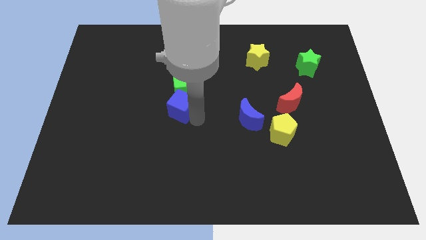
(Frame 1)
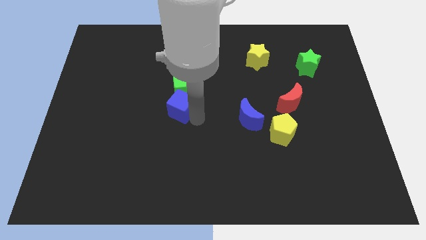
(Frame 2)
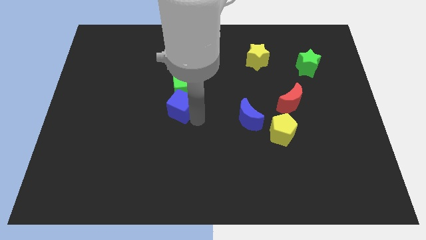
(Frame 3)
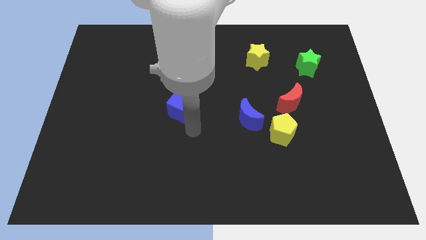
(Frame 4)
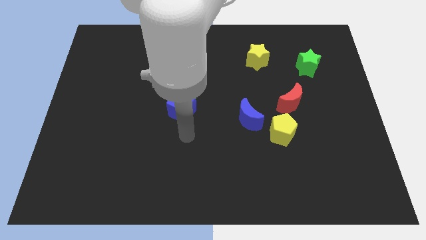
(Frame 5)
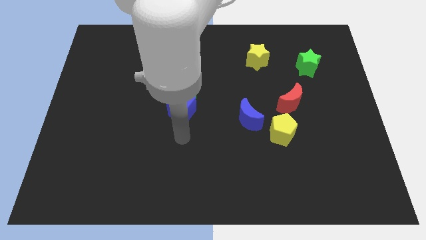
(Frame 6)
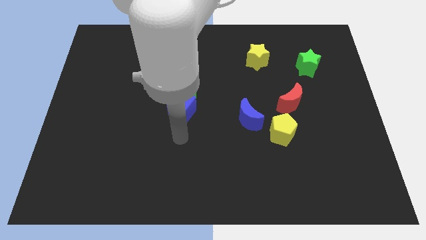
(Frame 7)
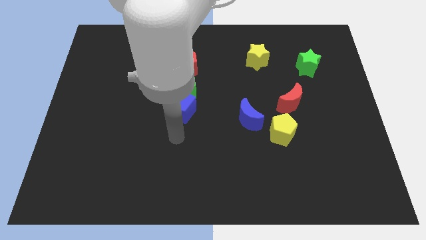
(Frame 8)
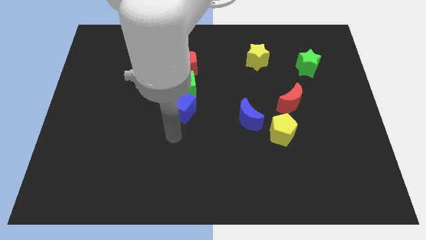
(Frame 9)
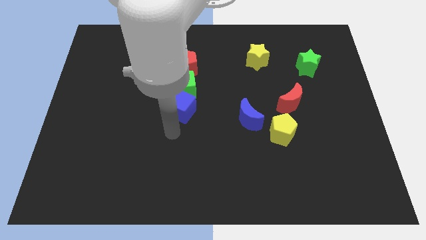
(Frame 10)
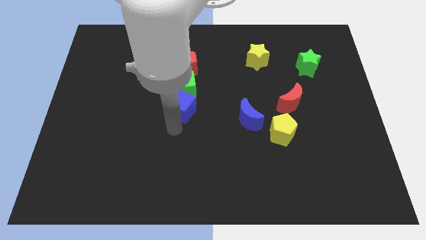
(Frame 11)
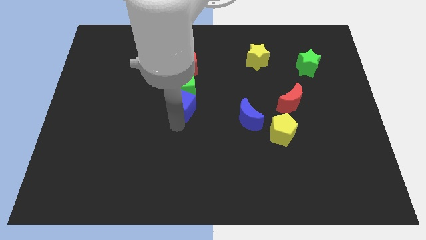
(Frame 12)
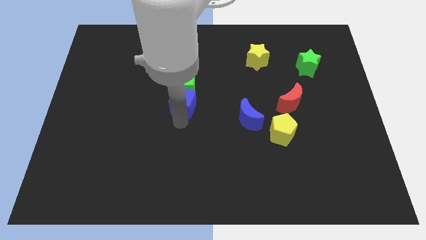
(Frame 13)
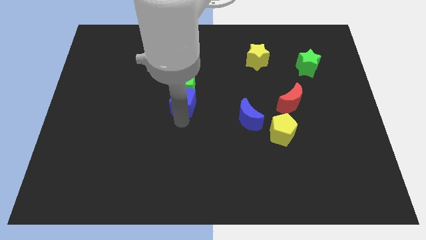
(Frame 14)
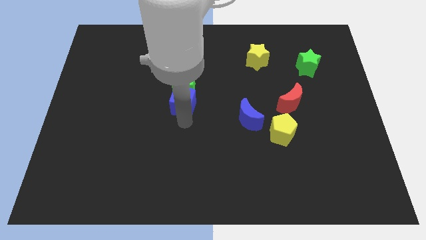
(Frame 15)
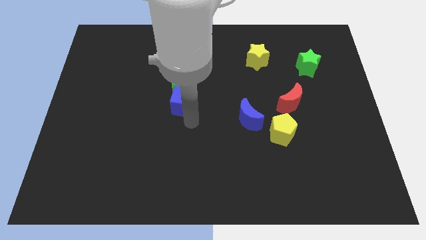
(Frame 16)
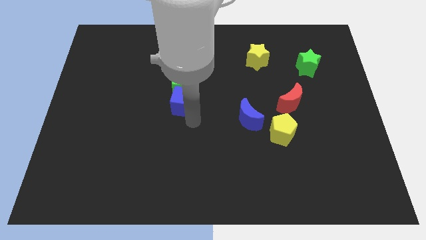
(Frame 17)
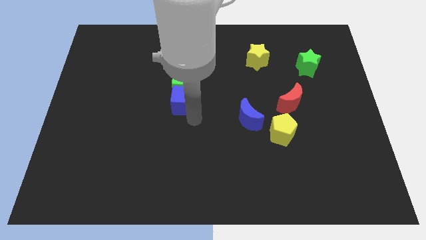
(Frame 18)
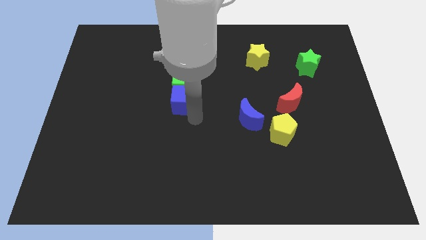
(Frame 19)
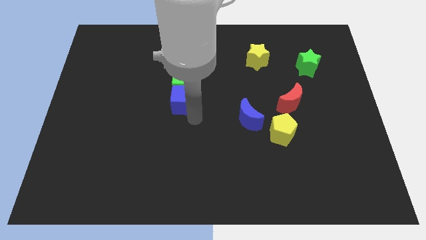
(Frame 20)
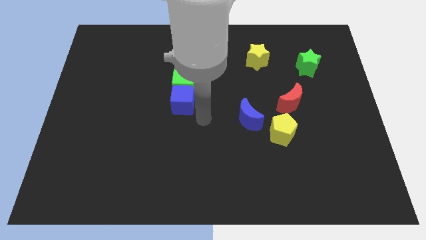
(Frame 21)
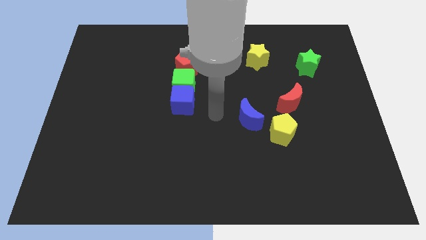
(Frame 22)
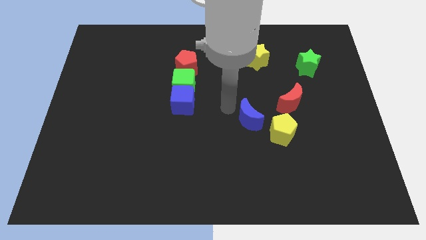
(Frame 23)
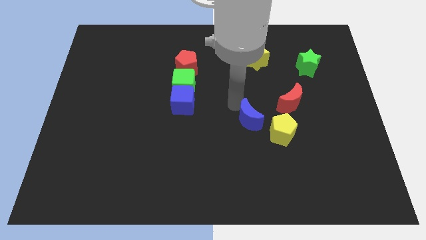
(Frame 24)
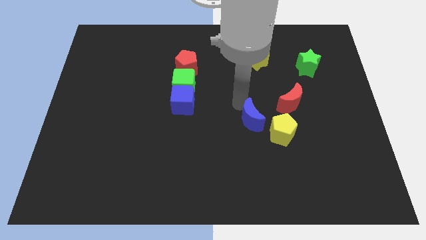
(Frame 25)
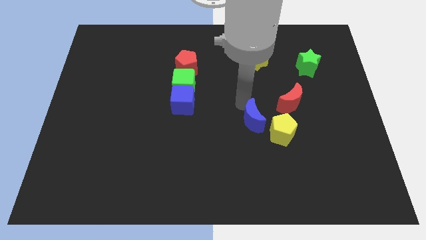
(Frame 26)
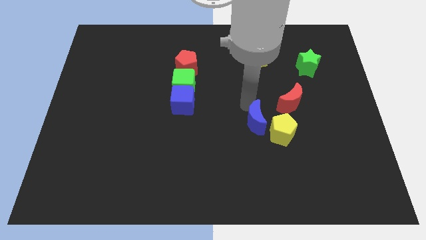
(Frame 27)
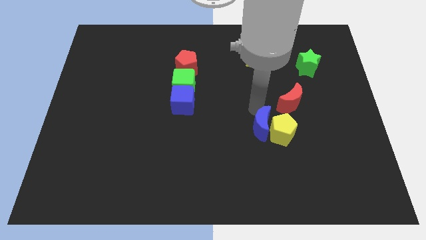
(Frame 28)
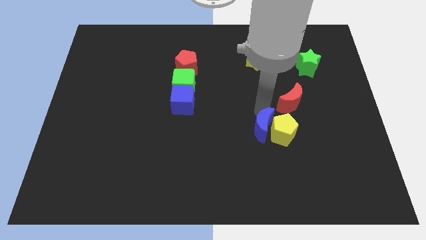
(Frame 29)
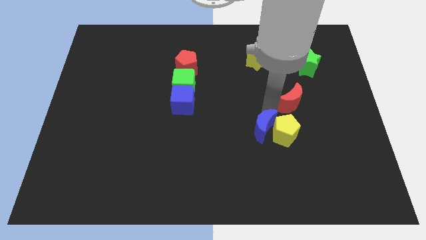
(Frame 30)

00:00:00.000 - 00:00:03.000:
move blue moon into the yellow pentagon

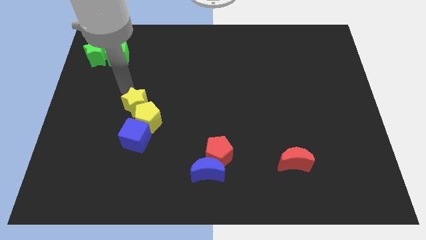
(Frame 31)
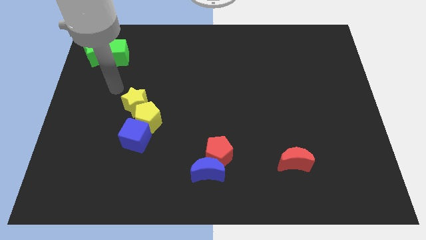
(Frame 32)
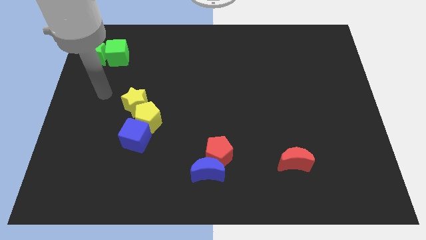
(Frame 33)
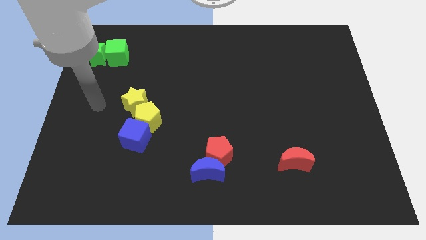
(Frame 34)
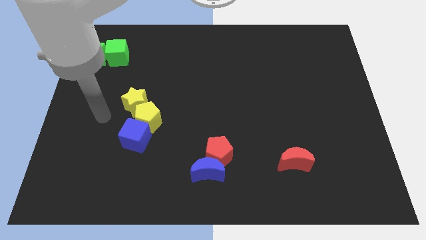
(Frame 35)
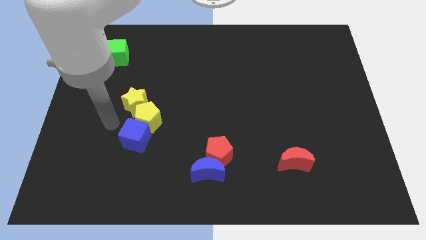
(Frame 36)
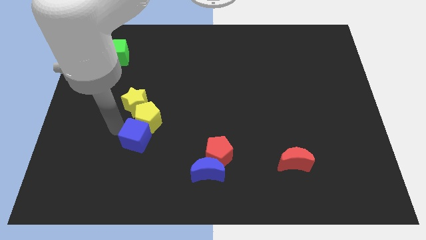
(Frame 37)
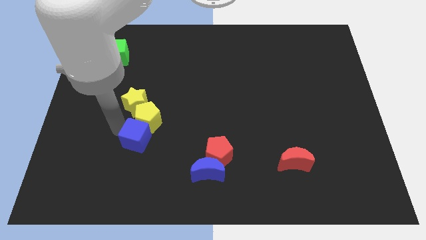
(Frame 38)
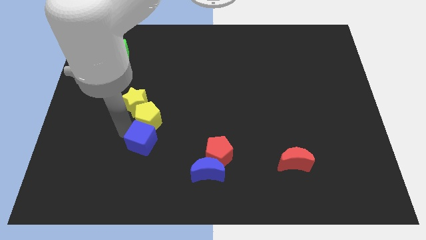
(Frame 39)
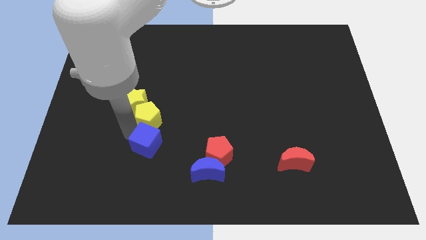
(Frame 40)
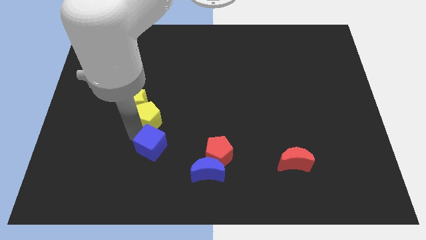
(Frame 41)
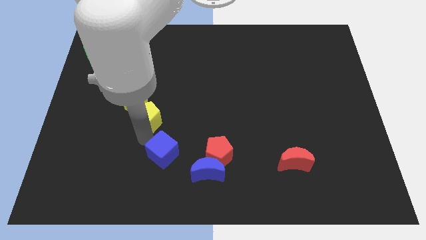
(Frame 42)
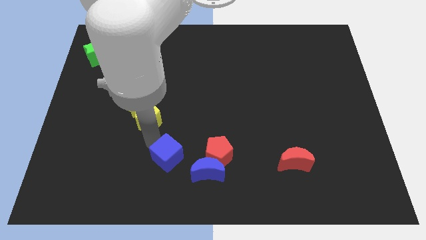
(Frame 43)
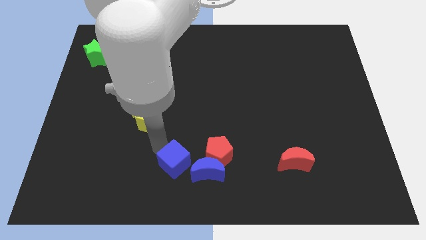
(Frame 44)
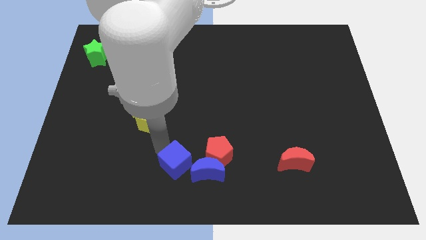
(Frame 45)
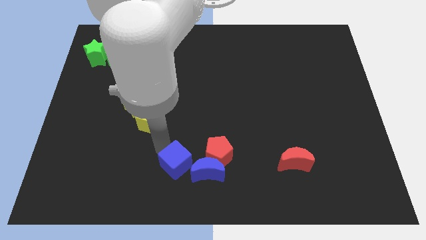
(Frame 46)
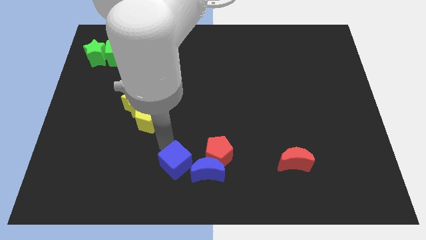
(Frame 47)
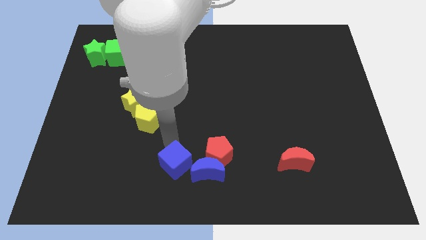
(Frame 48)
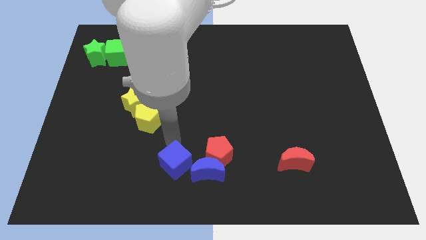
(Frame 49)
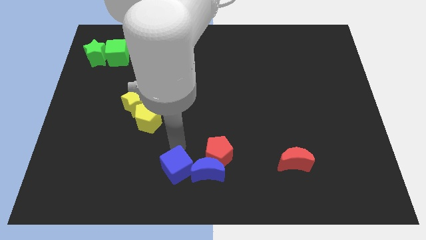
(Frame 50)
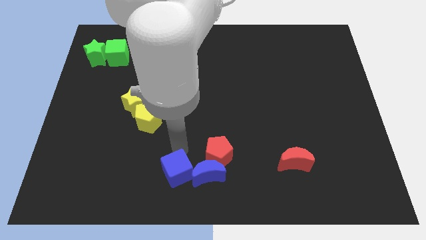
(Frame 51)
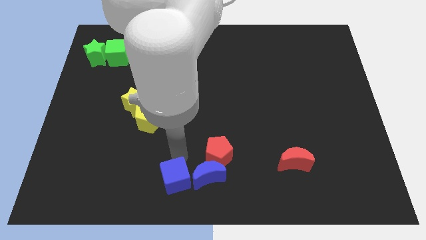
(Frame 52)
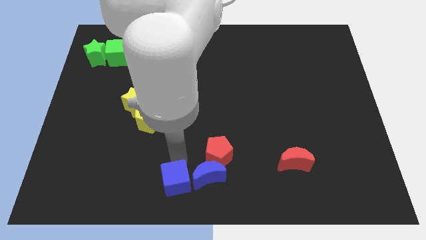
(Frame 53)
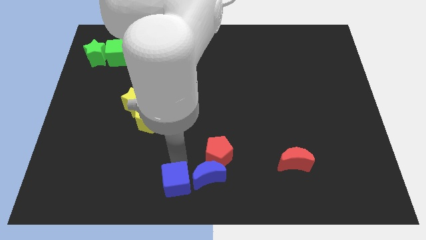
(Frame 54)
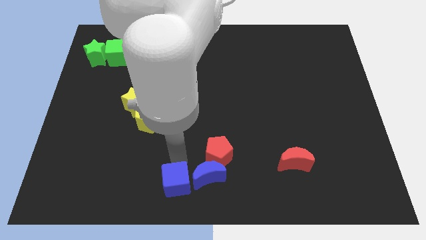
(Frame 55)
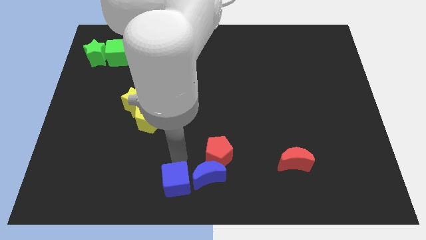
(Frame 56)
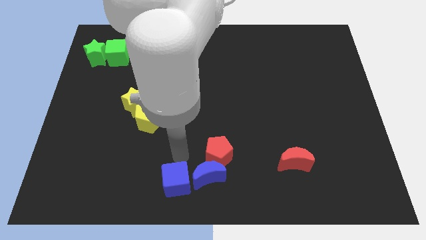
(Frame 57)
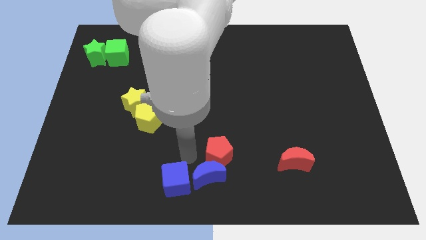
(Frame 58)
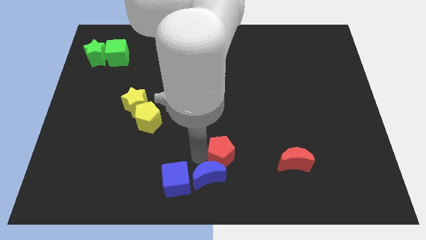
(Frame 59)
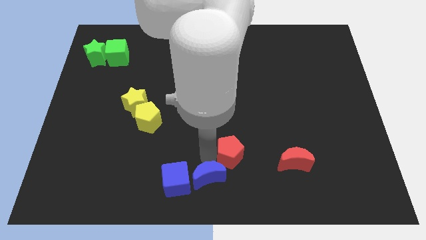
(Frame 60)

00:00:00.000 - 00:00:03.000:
move the blue cube left of blue moon

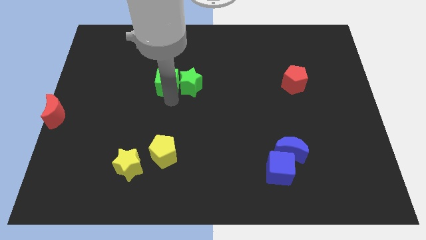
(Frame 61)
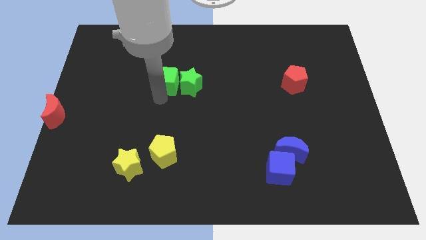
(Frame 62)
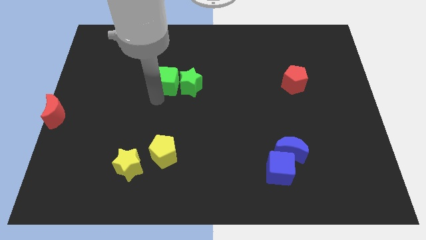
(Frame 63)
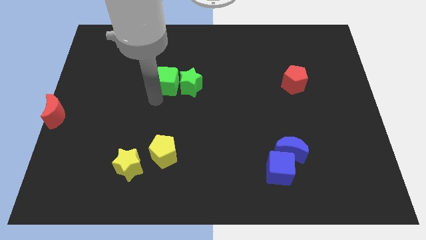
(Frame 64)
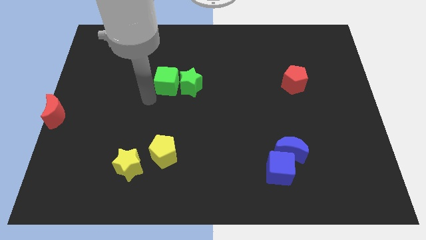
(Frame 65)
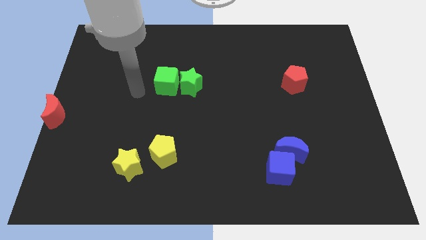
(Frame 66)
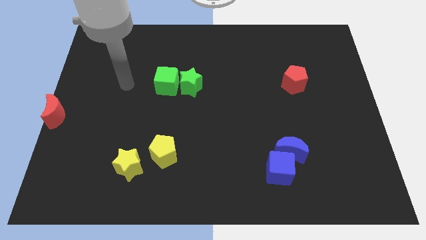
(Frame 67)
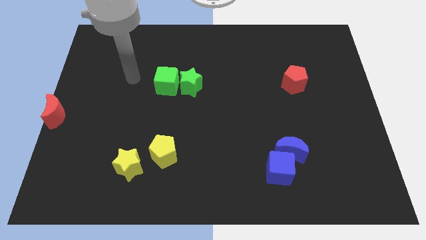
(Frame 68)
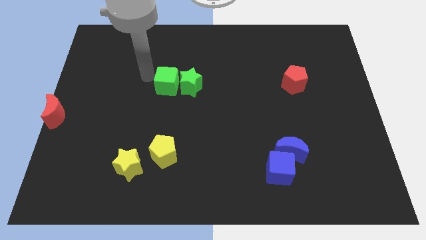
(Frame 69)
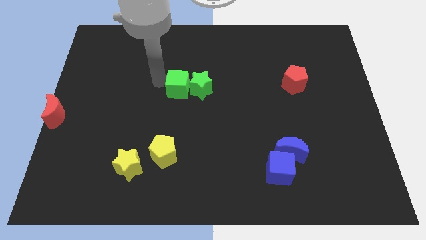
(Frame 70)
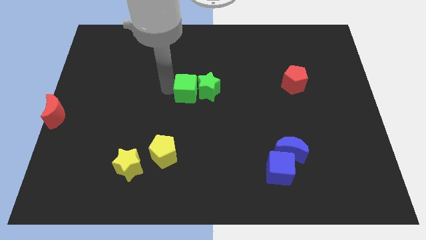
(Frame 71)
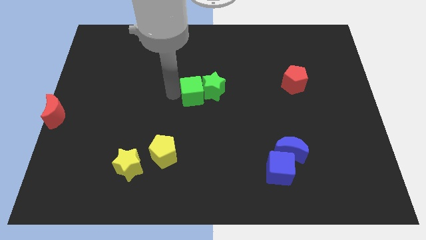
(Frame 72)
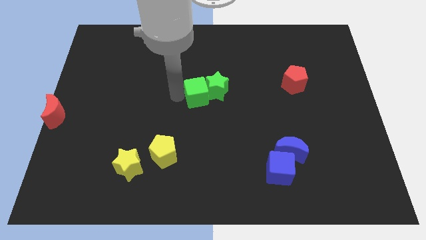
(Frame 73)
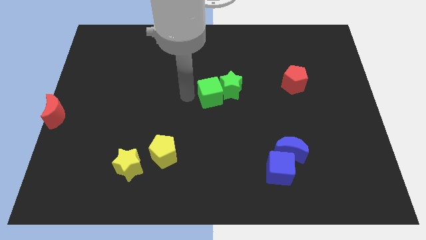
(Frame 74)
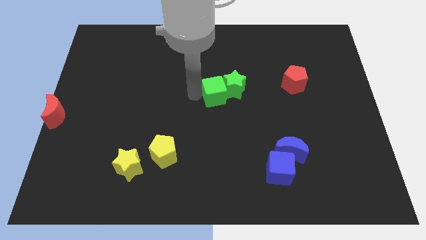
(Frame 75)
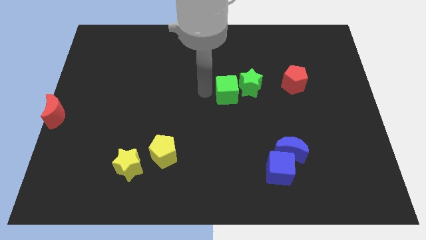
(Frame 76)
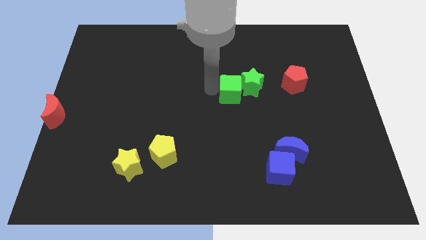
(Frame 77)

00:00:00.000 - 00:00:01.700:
push green cube to the center

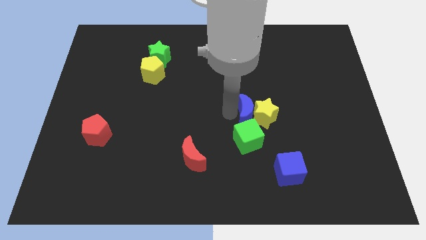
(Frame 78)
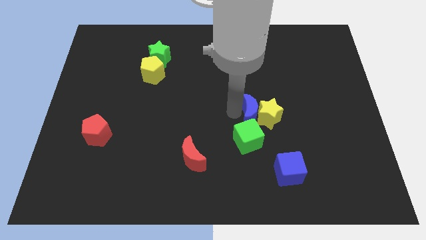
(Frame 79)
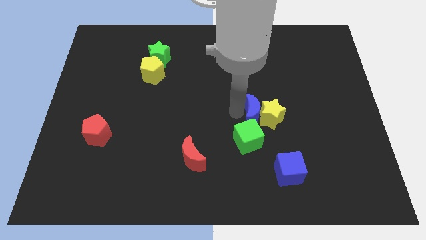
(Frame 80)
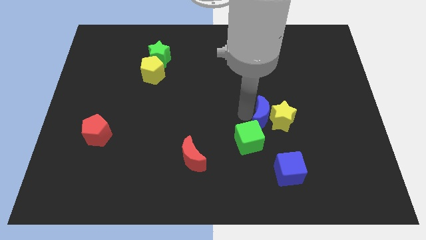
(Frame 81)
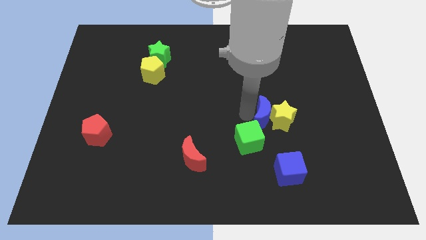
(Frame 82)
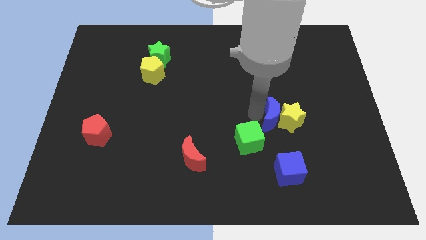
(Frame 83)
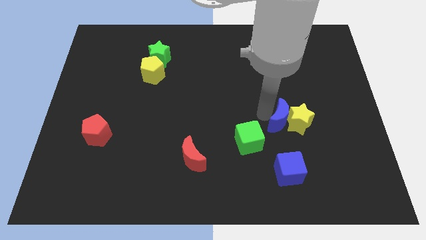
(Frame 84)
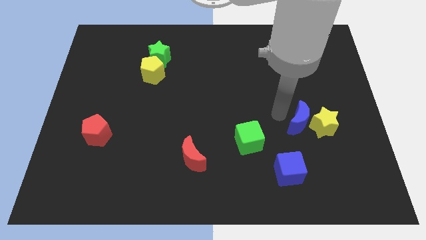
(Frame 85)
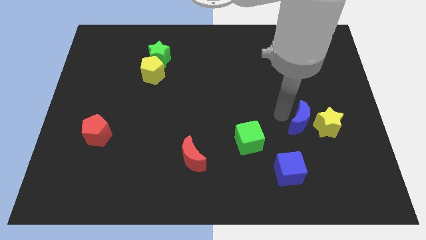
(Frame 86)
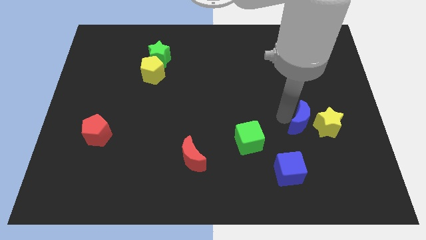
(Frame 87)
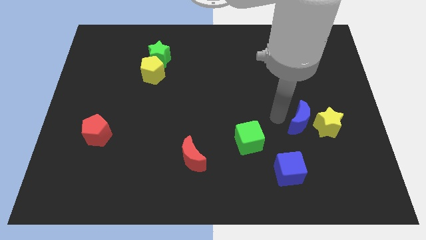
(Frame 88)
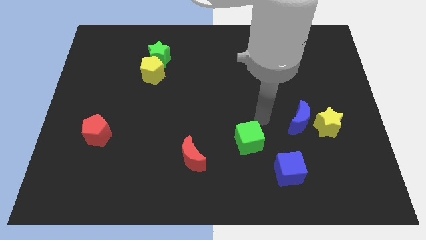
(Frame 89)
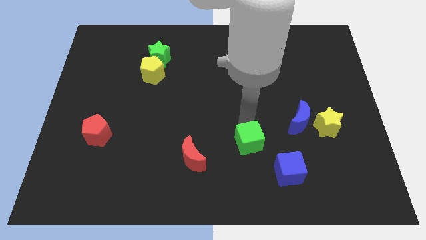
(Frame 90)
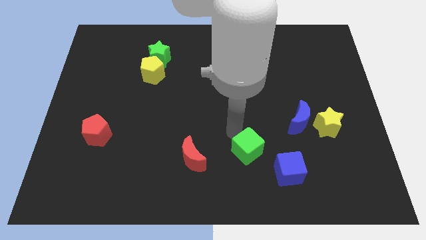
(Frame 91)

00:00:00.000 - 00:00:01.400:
move the blue moon along with the yellow star to the right
